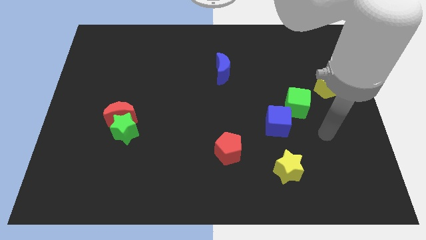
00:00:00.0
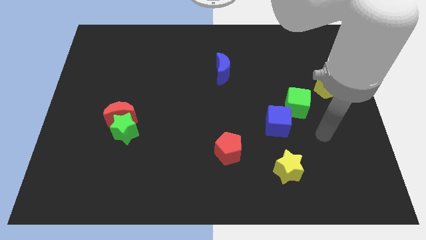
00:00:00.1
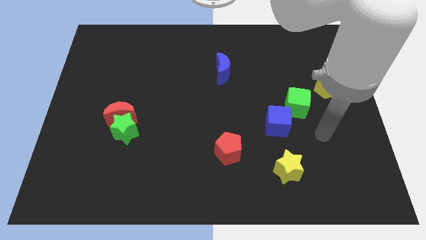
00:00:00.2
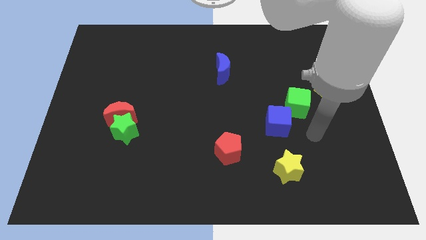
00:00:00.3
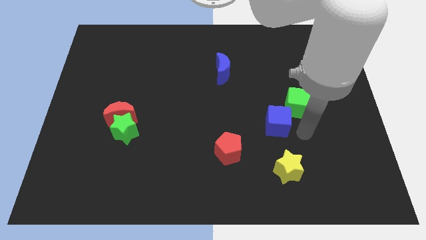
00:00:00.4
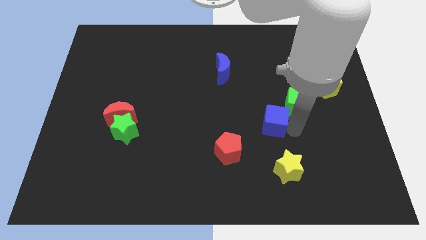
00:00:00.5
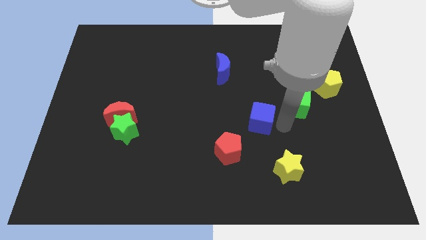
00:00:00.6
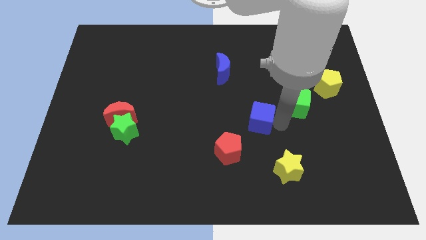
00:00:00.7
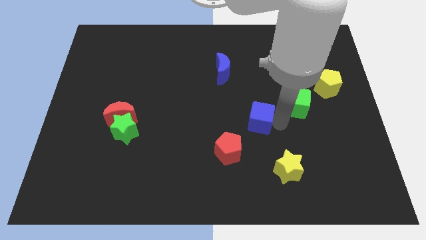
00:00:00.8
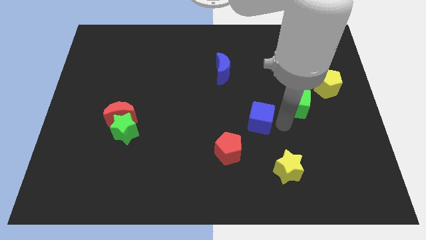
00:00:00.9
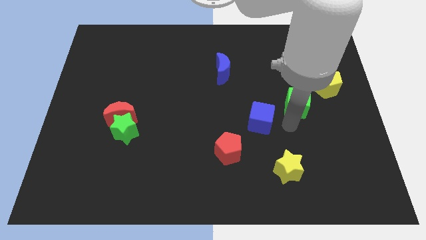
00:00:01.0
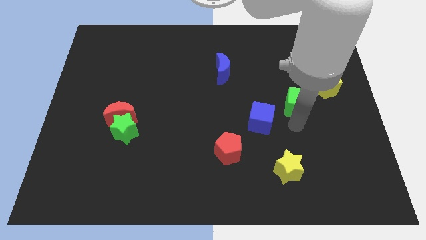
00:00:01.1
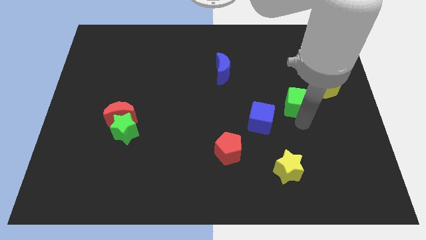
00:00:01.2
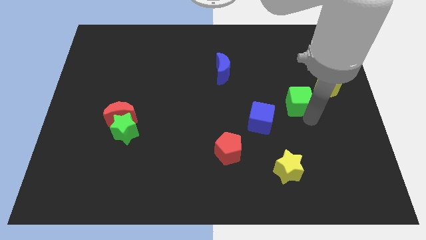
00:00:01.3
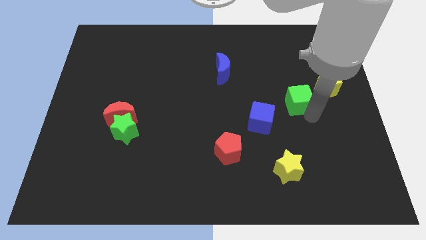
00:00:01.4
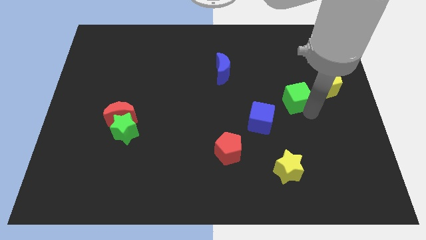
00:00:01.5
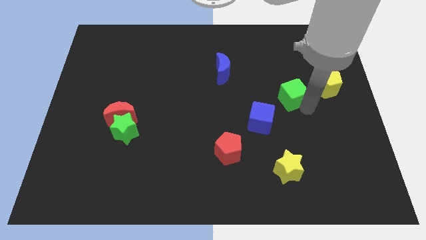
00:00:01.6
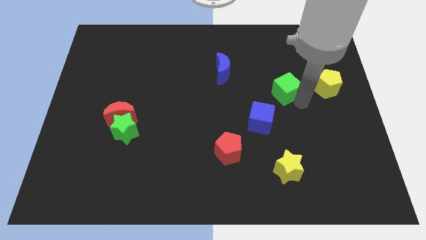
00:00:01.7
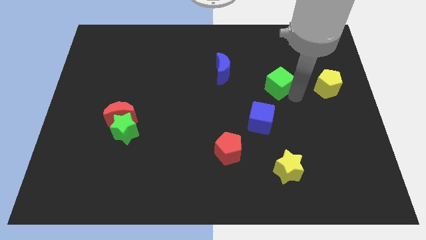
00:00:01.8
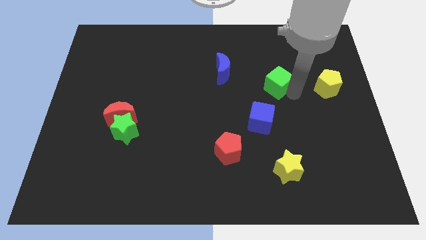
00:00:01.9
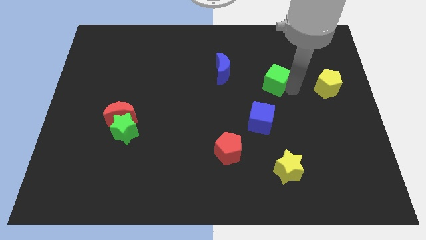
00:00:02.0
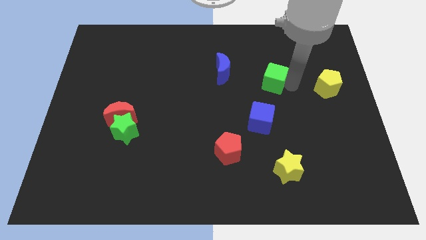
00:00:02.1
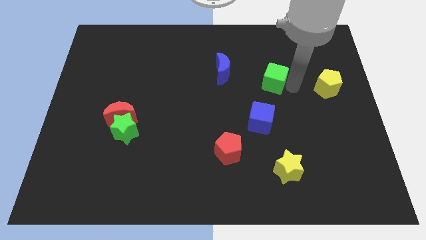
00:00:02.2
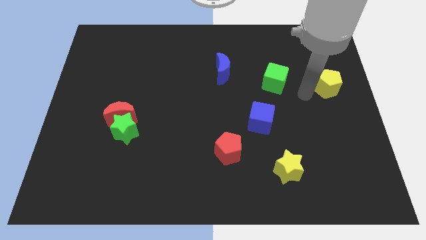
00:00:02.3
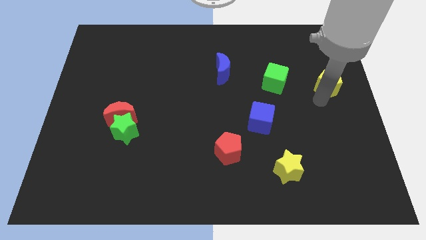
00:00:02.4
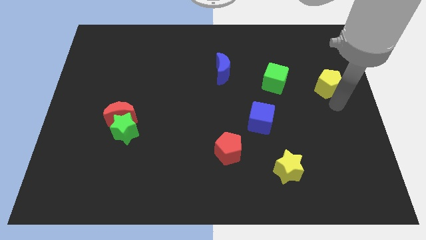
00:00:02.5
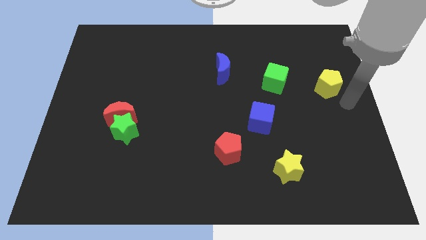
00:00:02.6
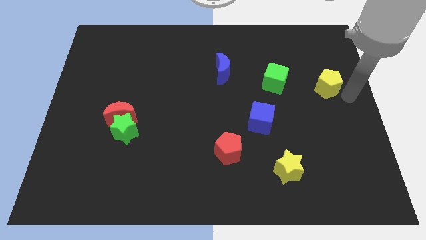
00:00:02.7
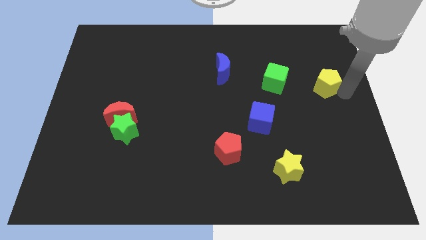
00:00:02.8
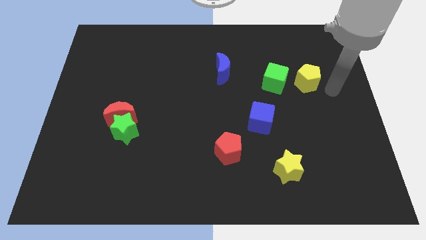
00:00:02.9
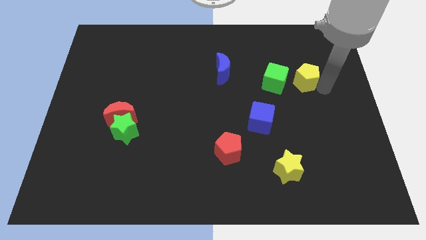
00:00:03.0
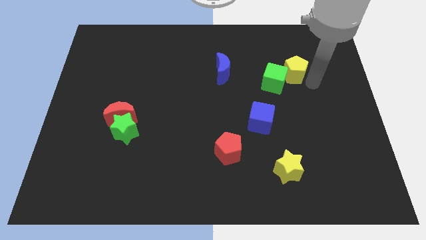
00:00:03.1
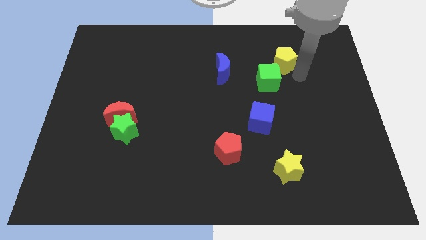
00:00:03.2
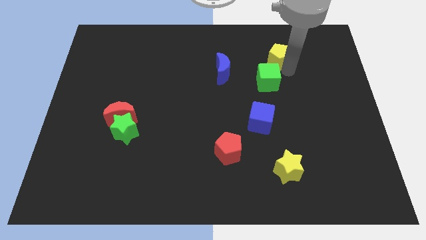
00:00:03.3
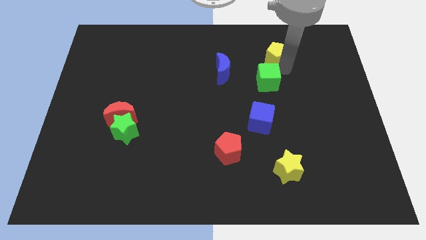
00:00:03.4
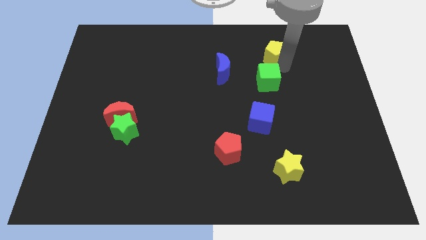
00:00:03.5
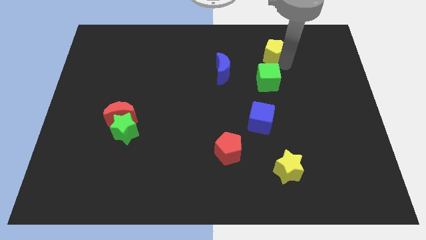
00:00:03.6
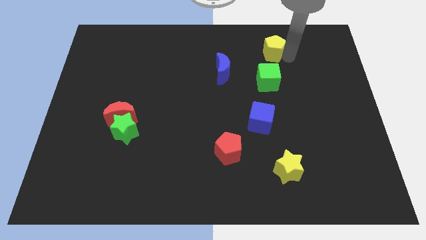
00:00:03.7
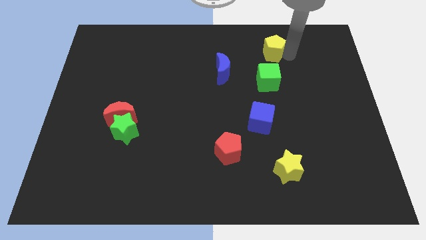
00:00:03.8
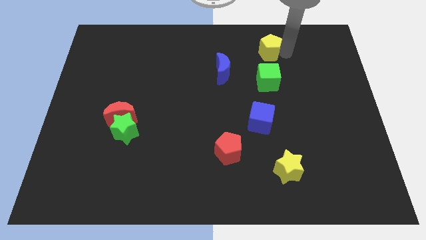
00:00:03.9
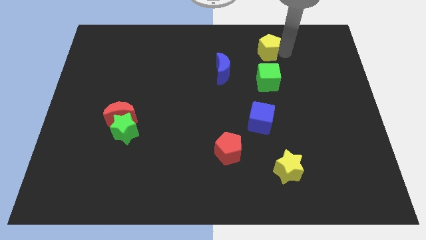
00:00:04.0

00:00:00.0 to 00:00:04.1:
arrange the group of blocks in a vertical line

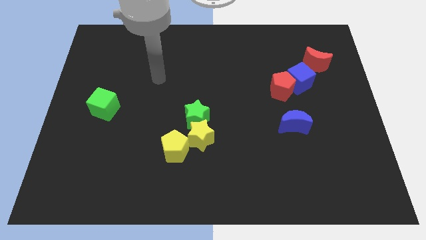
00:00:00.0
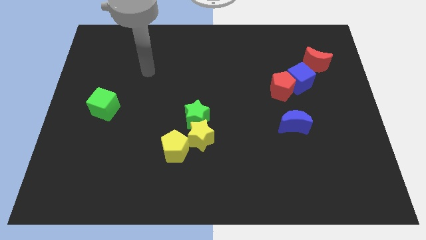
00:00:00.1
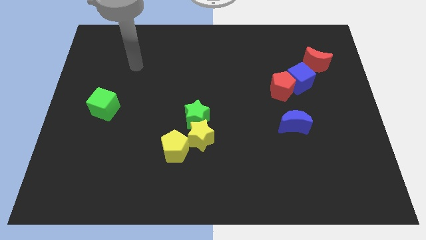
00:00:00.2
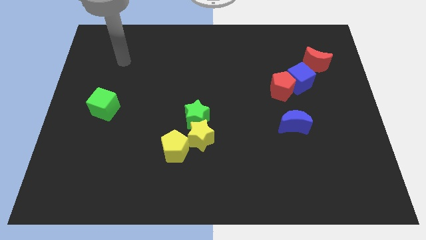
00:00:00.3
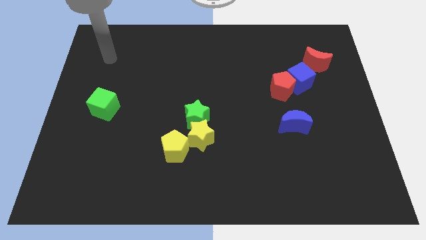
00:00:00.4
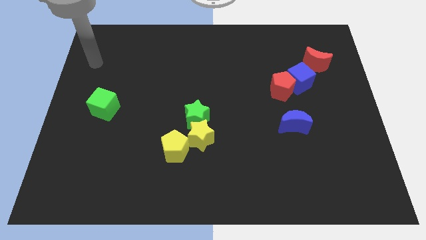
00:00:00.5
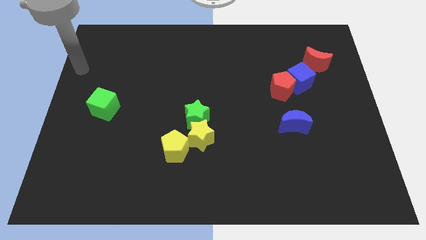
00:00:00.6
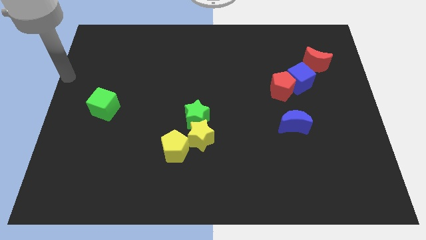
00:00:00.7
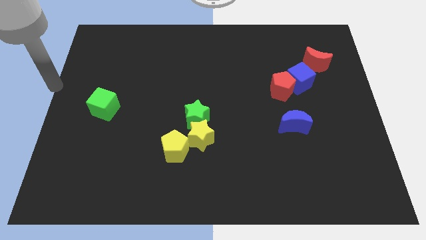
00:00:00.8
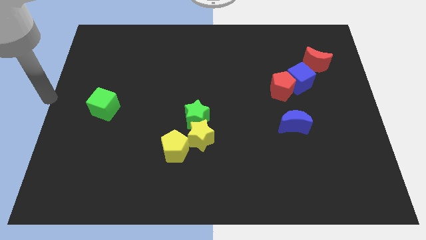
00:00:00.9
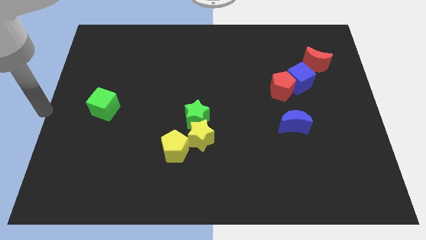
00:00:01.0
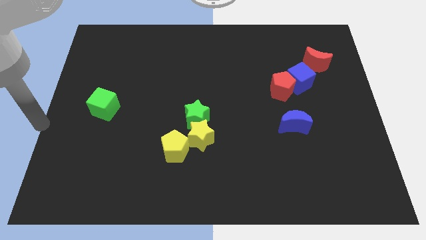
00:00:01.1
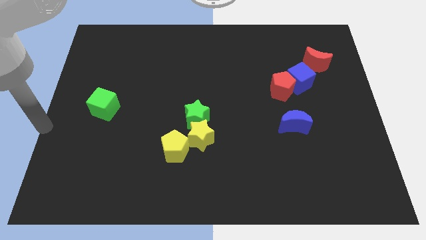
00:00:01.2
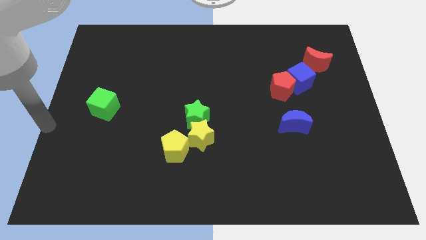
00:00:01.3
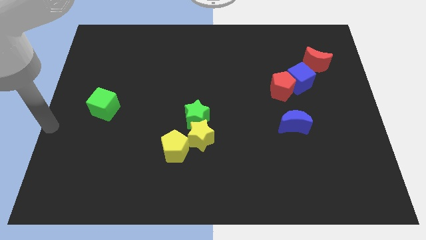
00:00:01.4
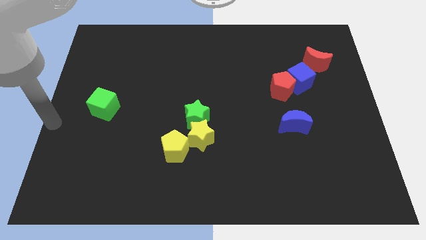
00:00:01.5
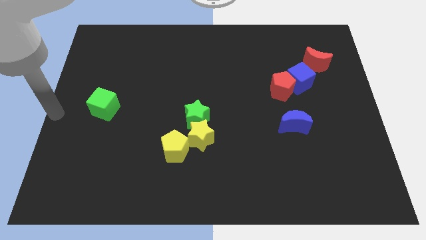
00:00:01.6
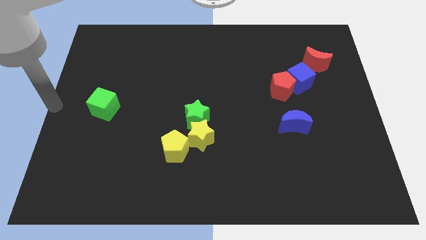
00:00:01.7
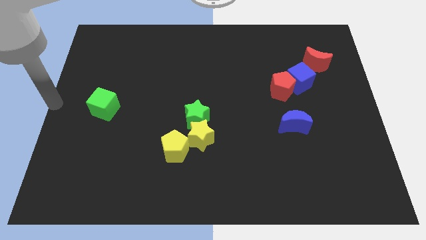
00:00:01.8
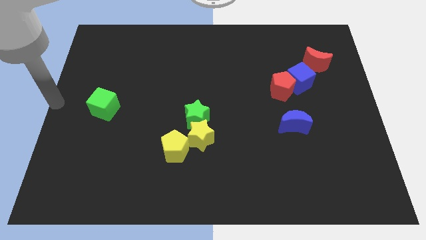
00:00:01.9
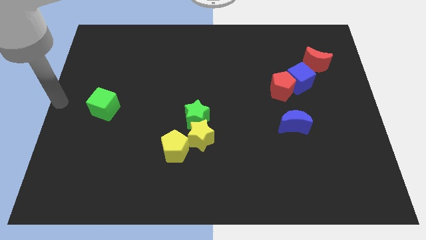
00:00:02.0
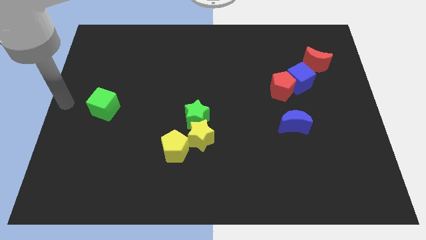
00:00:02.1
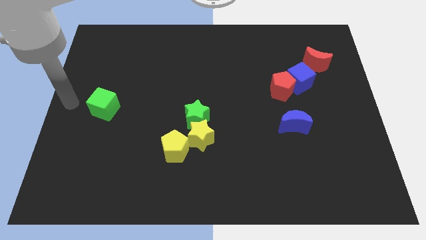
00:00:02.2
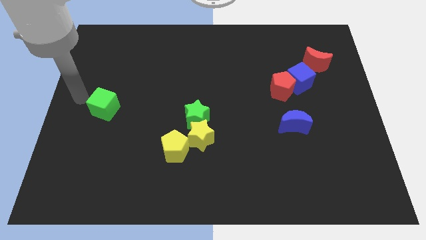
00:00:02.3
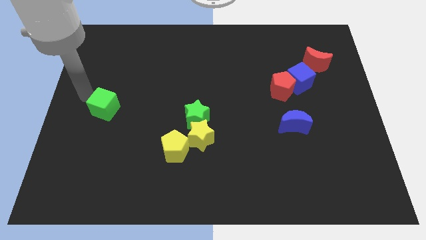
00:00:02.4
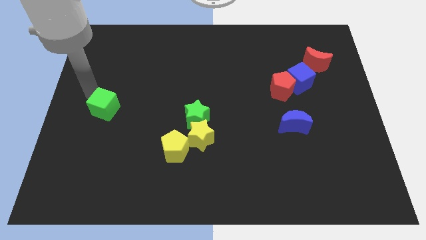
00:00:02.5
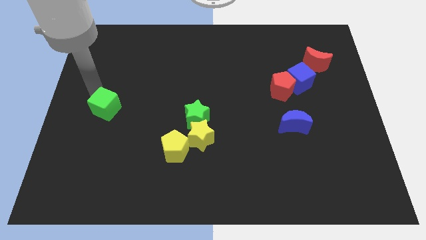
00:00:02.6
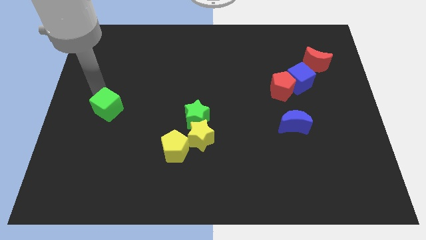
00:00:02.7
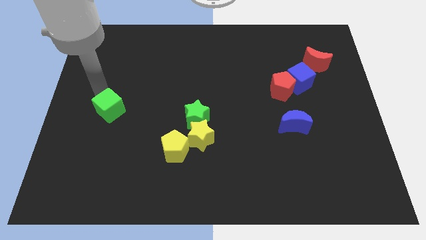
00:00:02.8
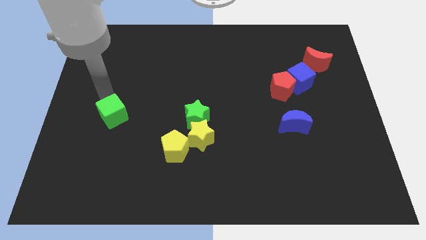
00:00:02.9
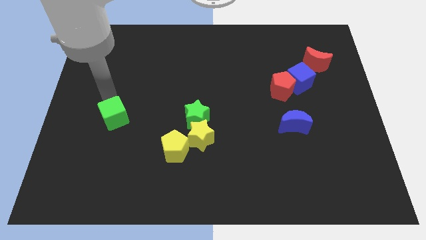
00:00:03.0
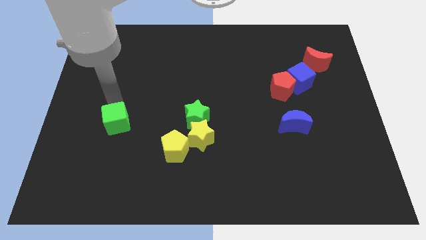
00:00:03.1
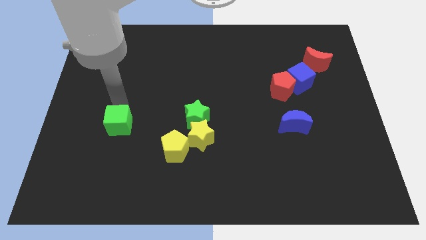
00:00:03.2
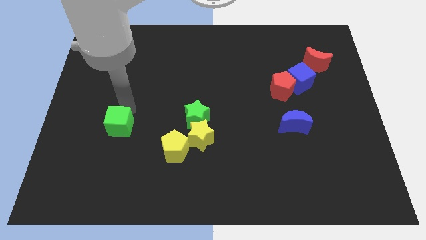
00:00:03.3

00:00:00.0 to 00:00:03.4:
place the green cube diagonally on the top left side of the yellow pentagon

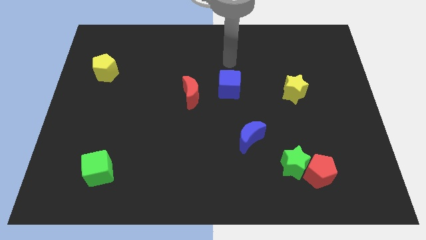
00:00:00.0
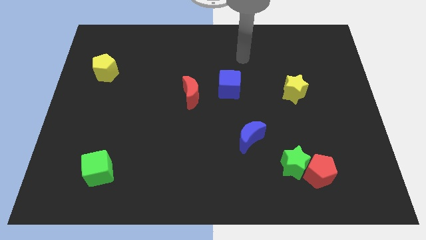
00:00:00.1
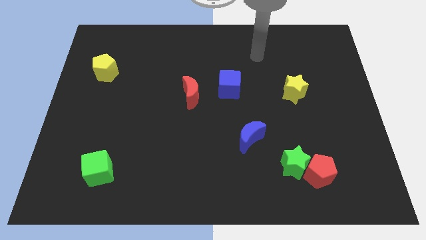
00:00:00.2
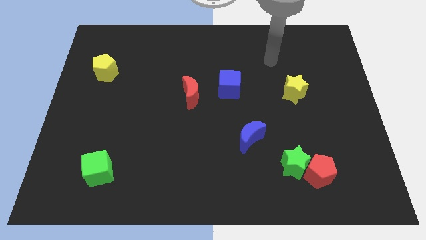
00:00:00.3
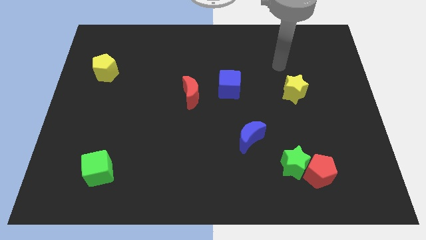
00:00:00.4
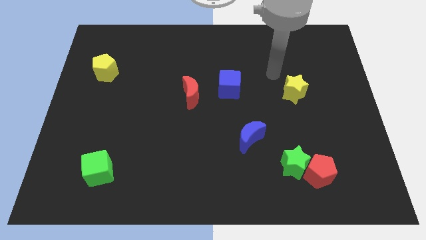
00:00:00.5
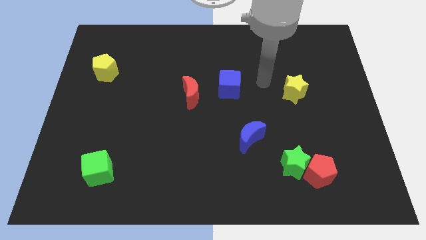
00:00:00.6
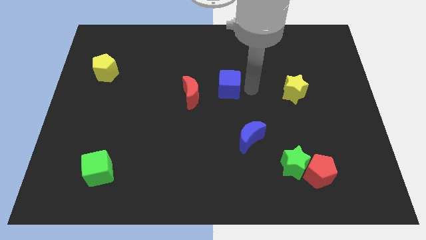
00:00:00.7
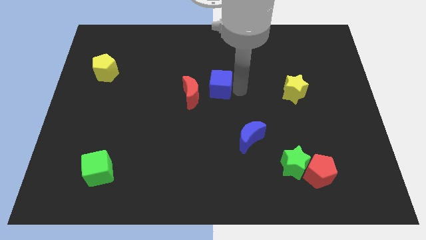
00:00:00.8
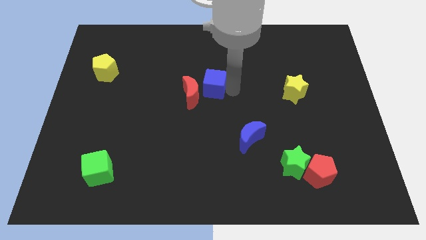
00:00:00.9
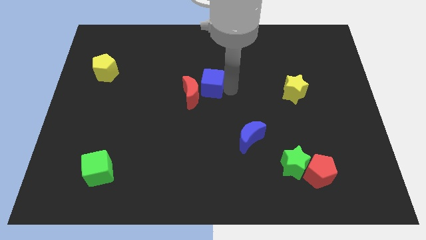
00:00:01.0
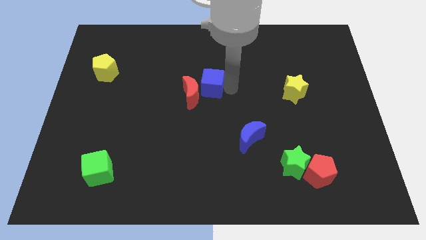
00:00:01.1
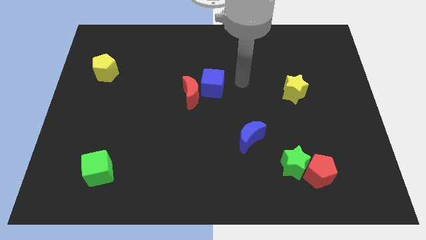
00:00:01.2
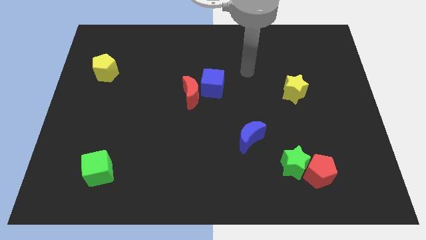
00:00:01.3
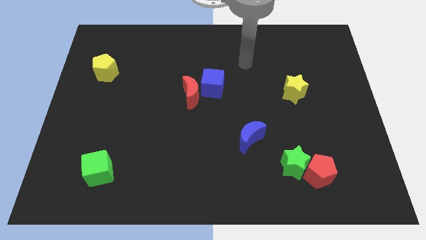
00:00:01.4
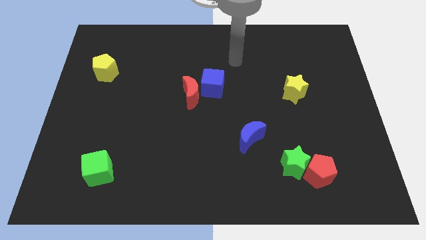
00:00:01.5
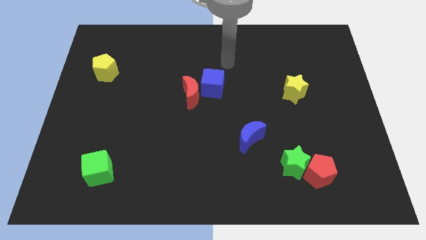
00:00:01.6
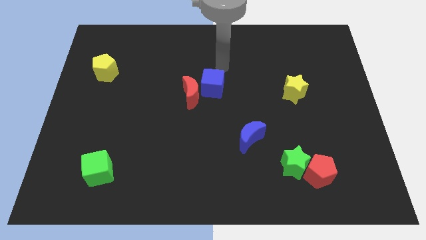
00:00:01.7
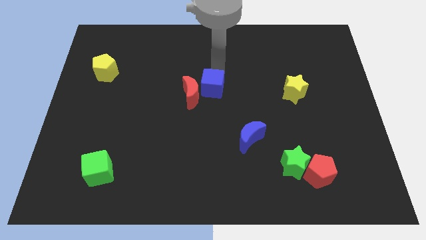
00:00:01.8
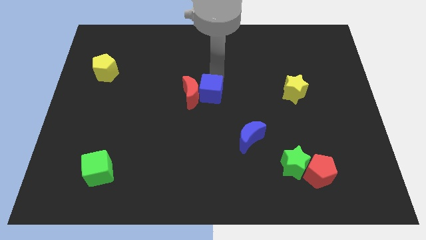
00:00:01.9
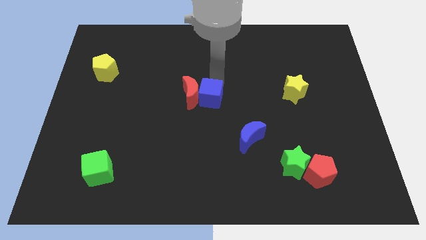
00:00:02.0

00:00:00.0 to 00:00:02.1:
push blue cube into red moon
